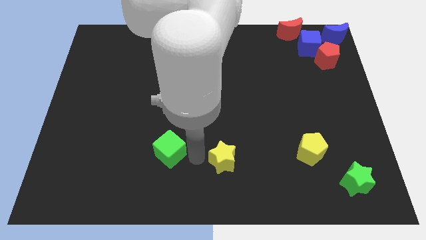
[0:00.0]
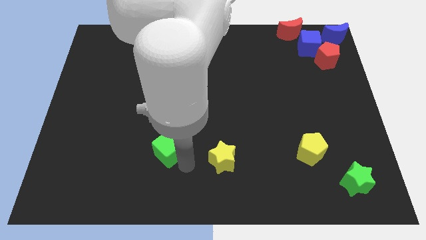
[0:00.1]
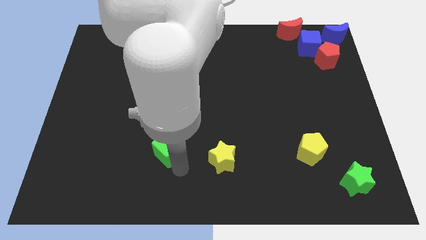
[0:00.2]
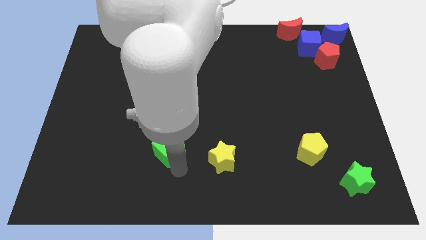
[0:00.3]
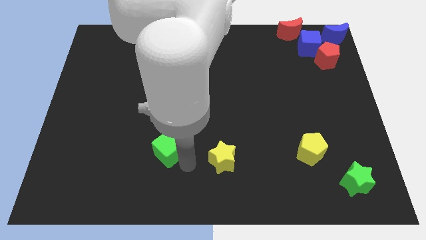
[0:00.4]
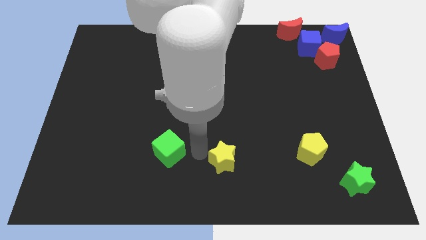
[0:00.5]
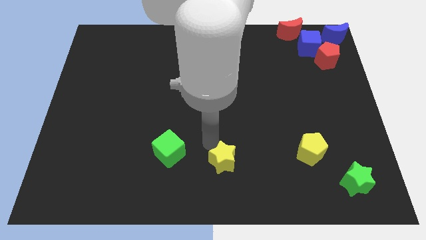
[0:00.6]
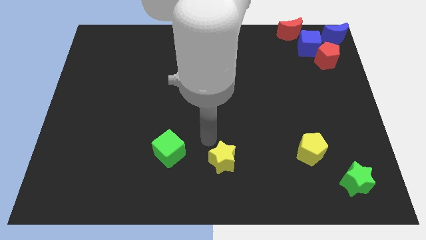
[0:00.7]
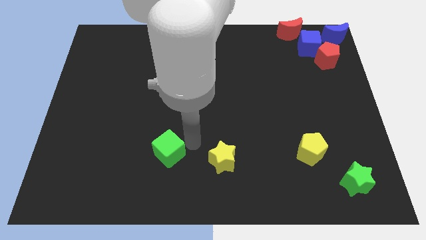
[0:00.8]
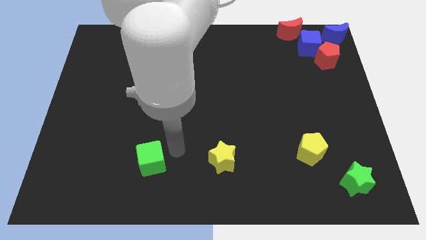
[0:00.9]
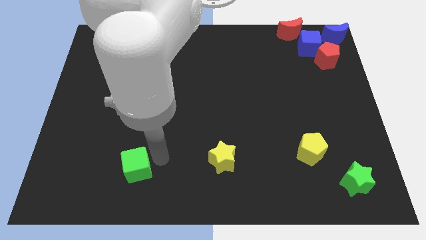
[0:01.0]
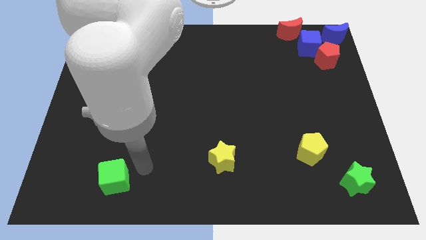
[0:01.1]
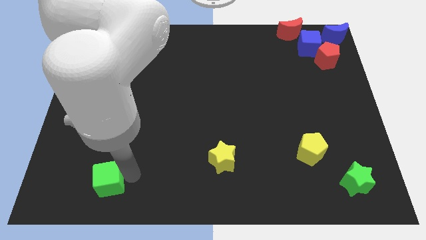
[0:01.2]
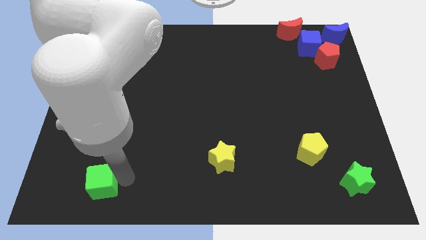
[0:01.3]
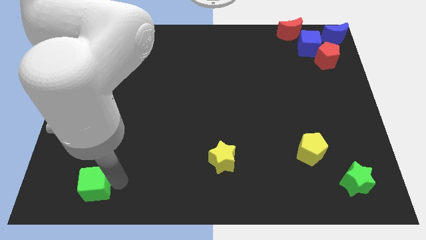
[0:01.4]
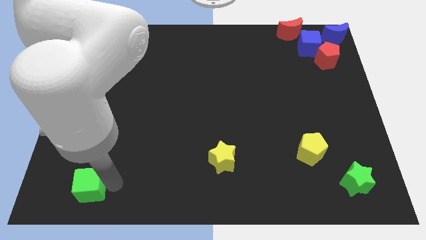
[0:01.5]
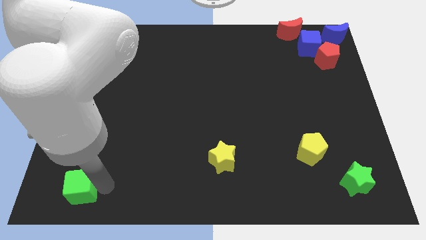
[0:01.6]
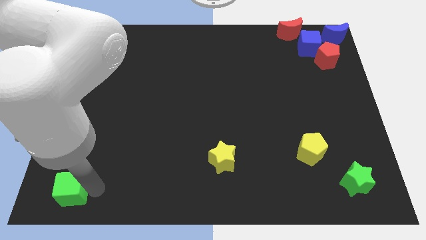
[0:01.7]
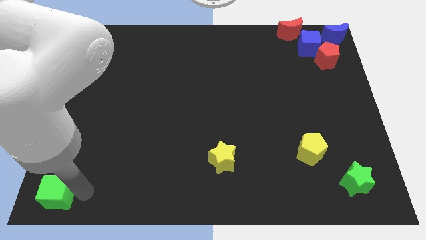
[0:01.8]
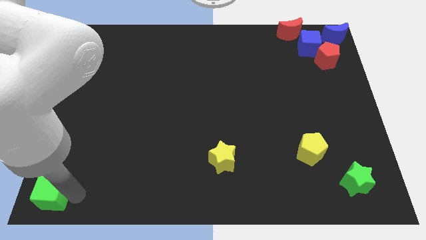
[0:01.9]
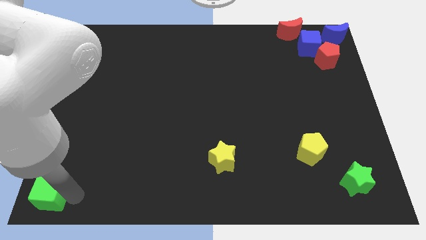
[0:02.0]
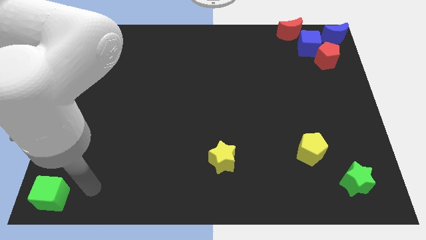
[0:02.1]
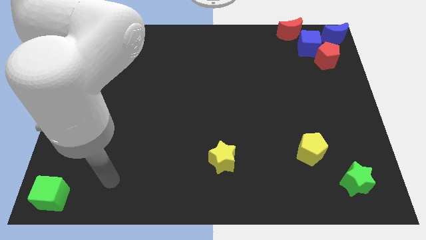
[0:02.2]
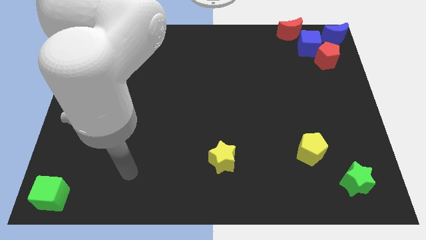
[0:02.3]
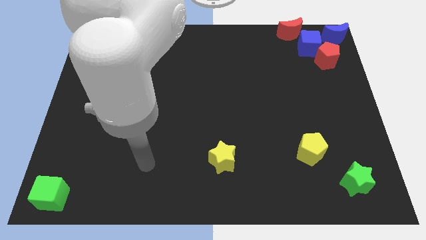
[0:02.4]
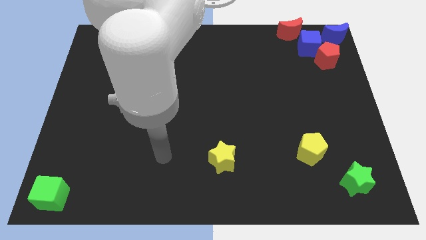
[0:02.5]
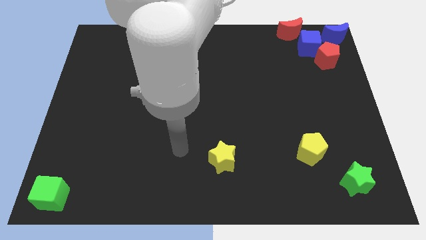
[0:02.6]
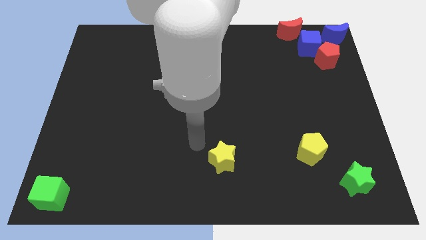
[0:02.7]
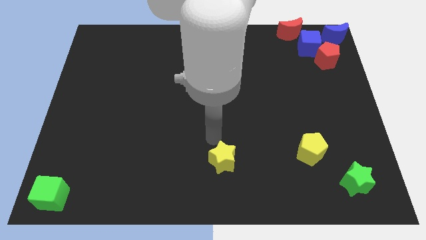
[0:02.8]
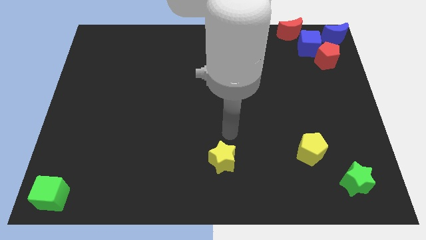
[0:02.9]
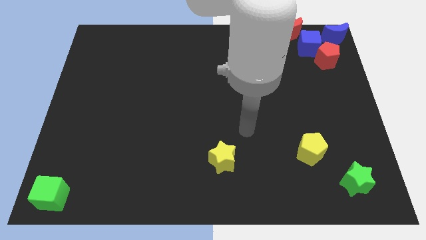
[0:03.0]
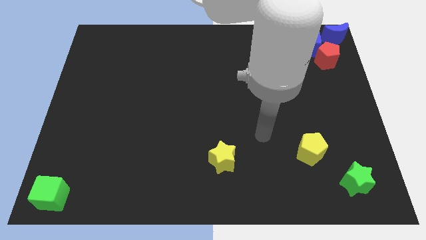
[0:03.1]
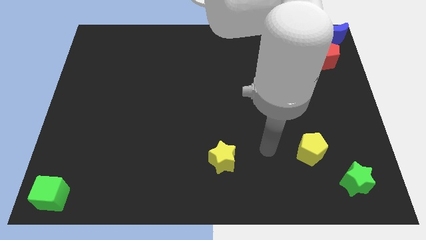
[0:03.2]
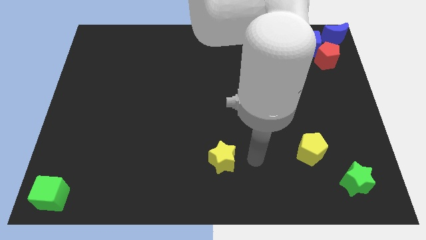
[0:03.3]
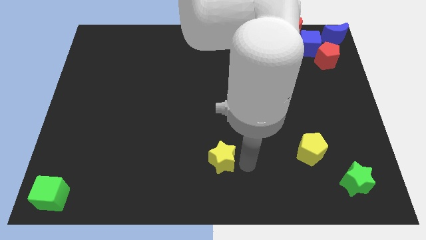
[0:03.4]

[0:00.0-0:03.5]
put the green cube to the bottom left corner of the board

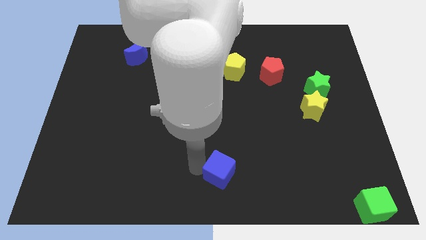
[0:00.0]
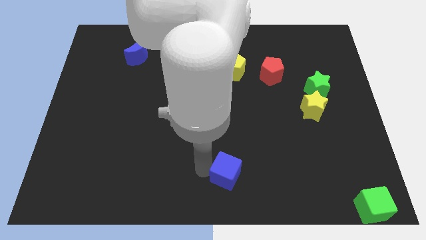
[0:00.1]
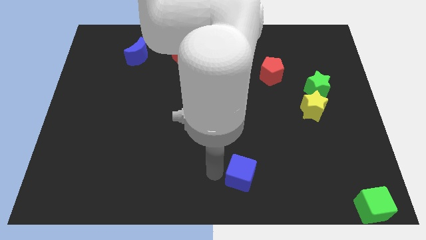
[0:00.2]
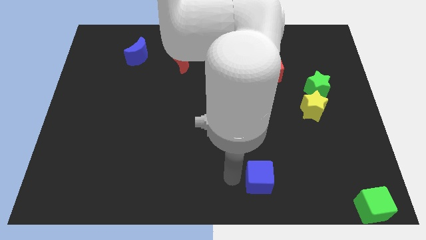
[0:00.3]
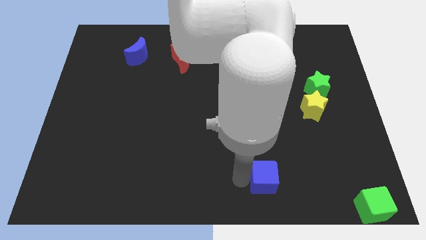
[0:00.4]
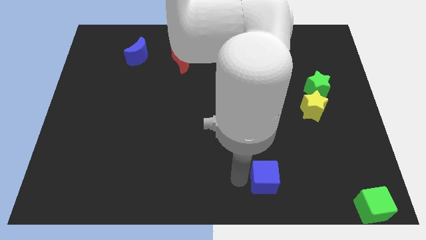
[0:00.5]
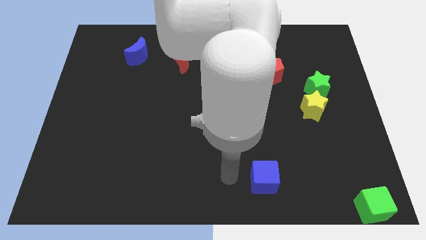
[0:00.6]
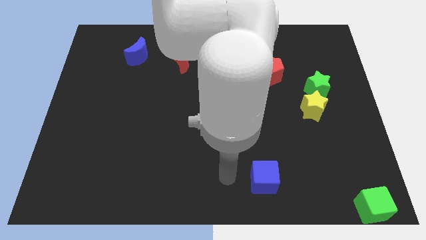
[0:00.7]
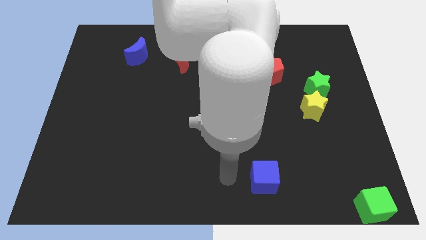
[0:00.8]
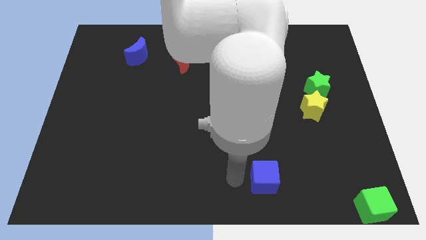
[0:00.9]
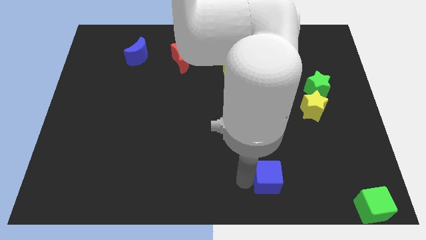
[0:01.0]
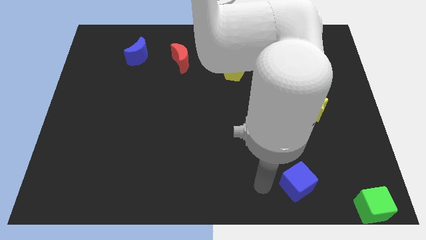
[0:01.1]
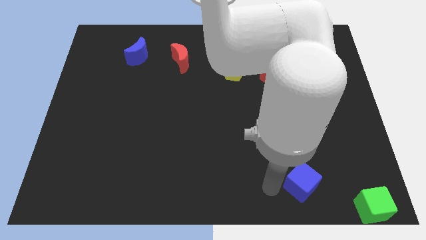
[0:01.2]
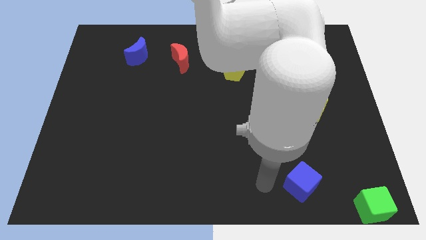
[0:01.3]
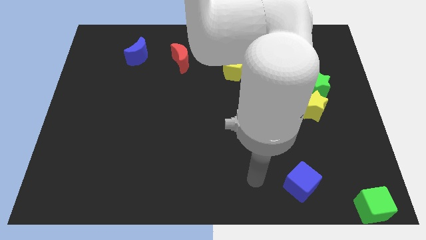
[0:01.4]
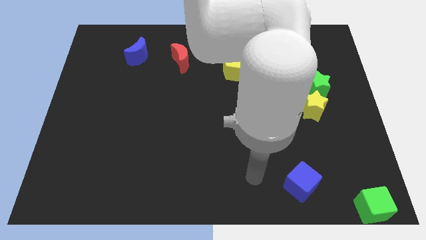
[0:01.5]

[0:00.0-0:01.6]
slide the blue cube diagonally bottom right to the yellow pentagon

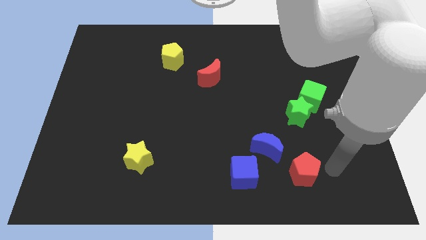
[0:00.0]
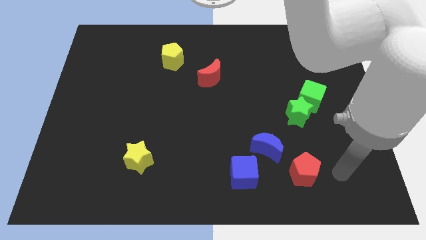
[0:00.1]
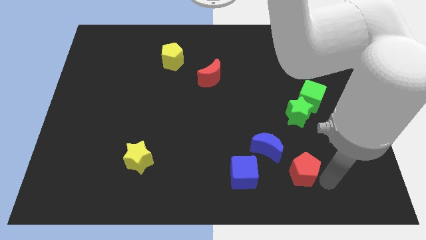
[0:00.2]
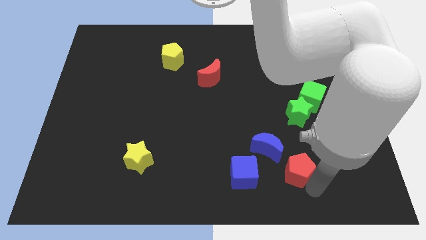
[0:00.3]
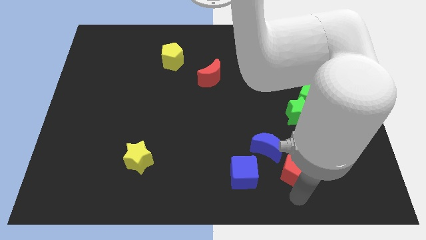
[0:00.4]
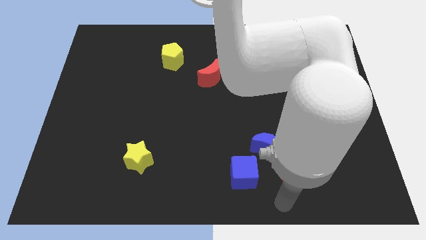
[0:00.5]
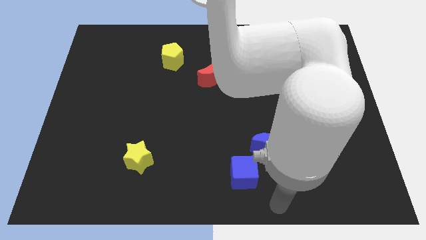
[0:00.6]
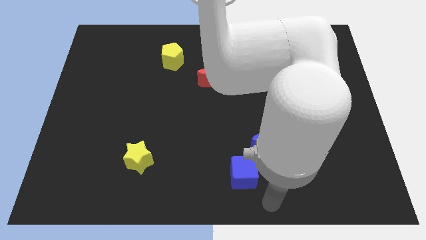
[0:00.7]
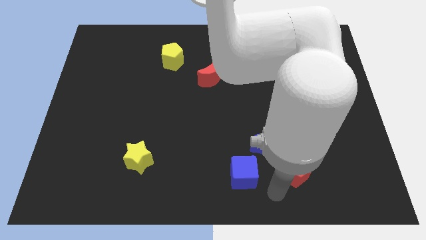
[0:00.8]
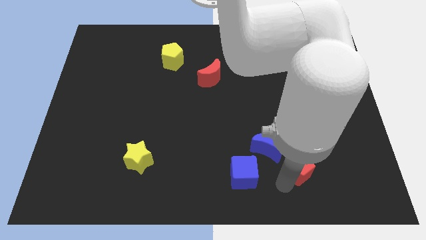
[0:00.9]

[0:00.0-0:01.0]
touch the bottom of red pentagon

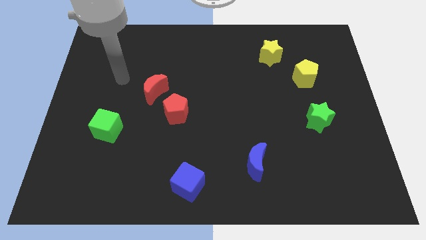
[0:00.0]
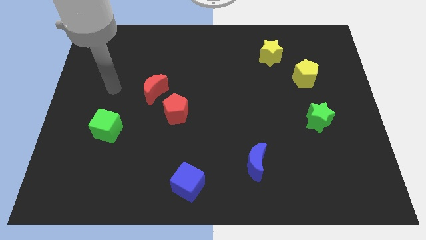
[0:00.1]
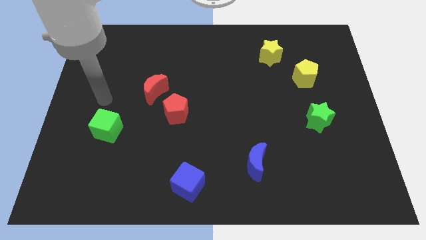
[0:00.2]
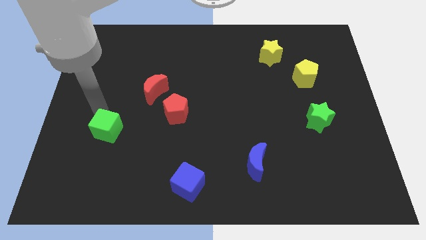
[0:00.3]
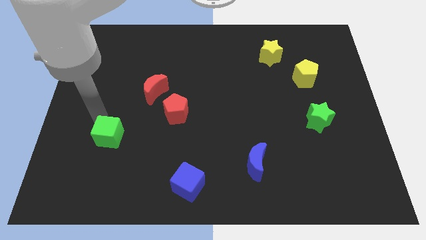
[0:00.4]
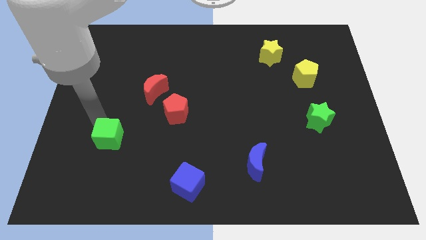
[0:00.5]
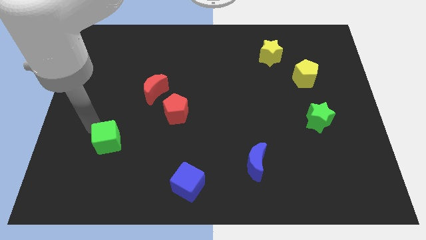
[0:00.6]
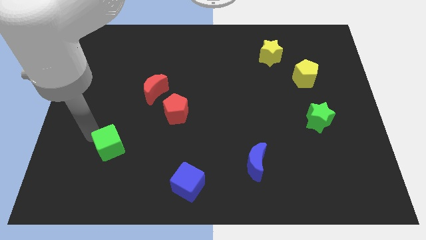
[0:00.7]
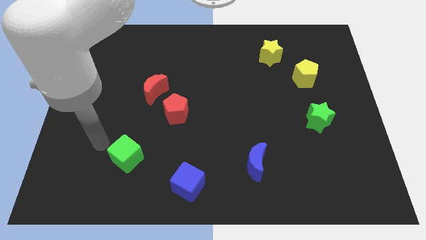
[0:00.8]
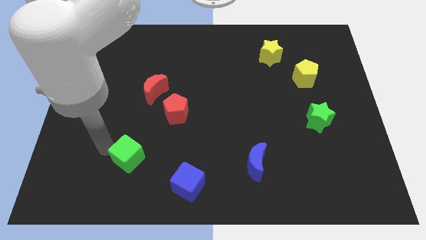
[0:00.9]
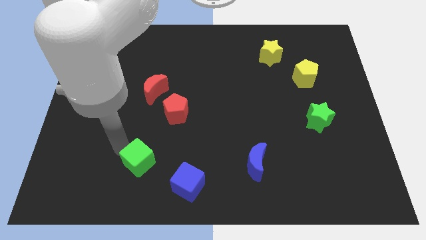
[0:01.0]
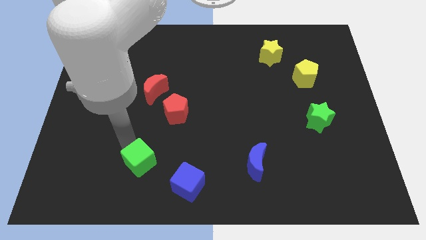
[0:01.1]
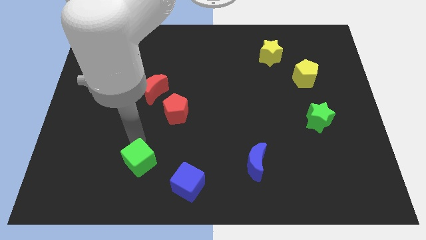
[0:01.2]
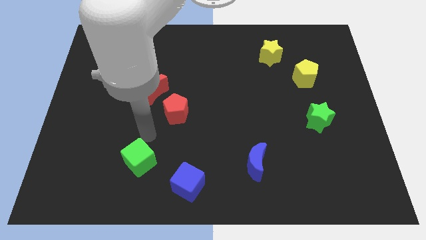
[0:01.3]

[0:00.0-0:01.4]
put the green cube at the bottom side of the red crescent

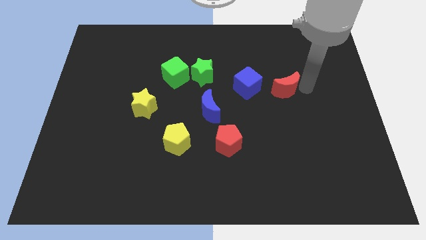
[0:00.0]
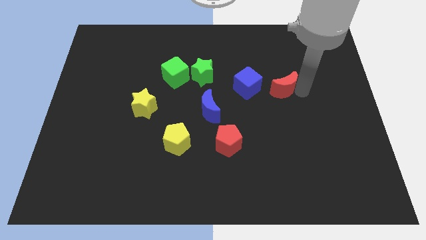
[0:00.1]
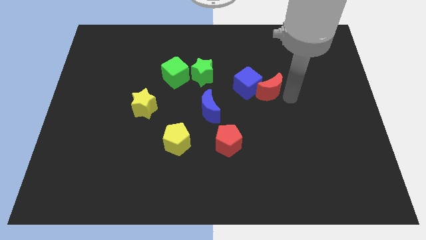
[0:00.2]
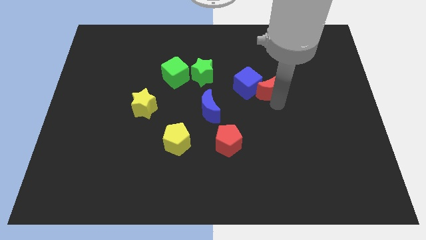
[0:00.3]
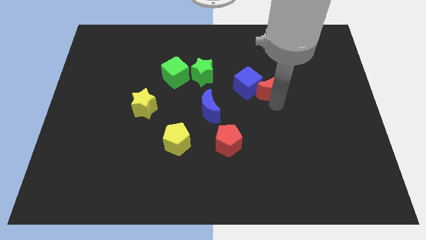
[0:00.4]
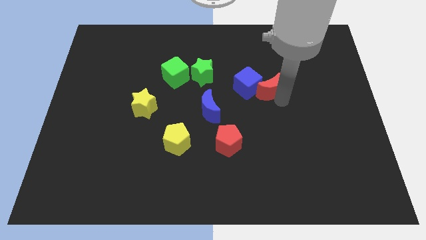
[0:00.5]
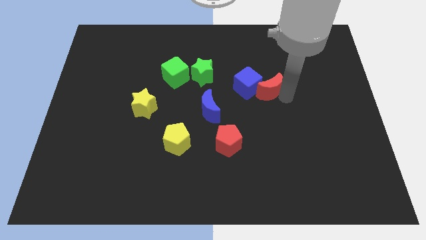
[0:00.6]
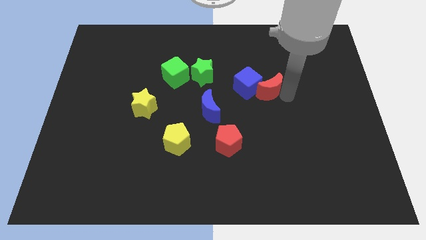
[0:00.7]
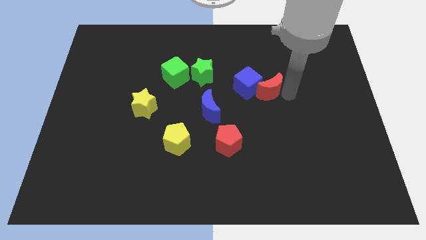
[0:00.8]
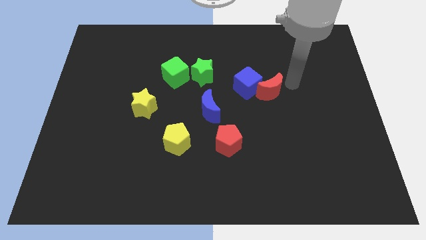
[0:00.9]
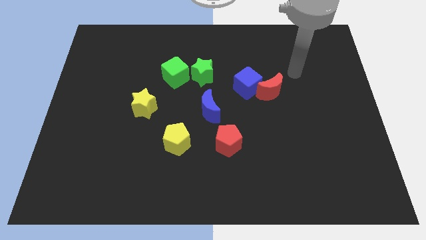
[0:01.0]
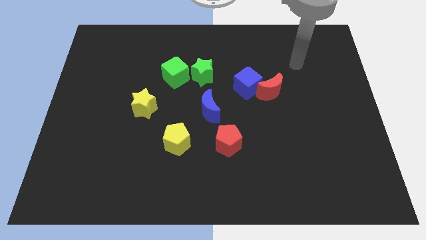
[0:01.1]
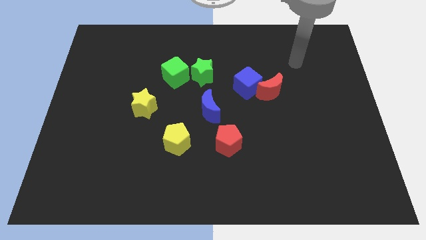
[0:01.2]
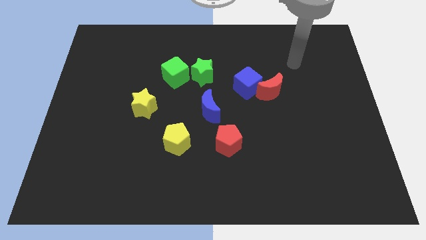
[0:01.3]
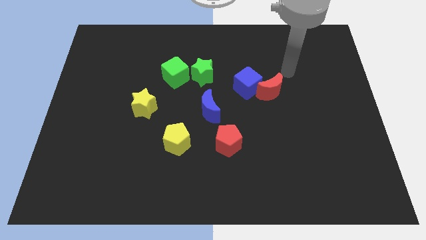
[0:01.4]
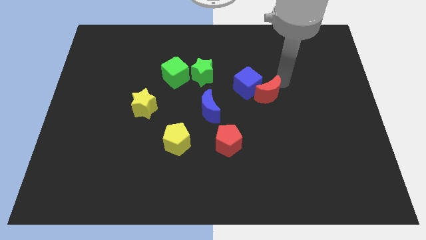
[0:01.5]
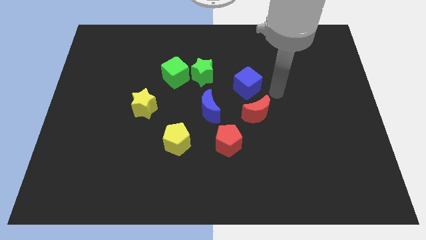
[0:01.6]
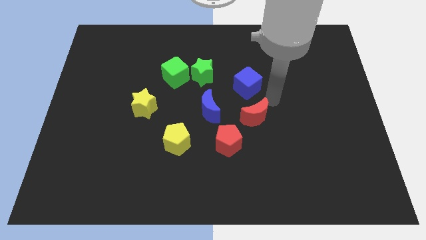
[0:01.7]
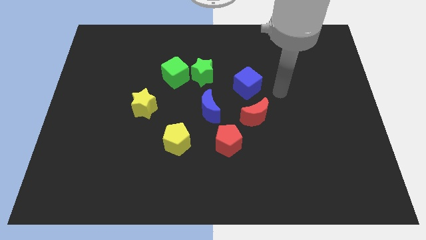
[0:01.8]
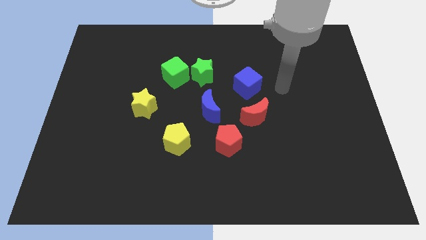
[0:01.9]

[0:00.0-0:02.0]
place red crescent below blue cube
